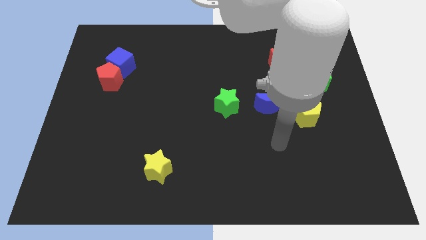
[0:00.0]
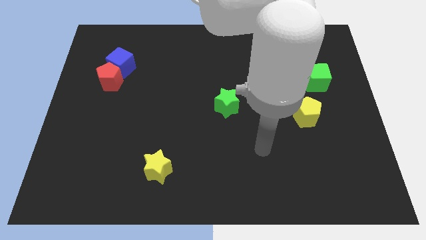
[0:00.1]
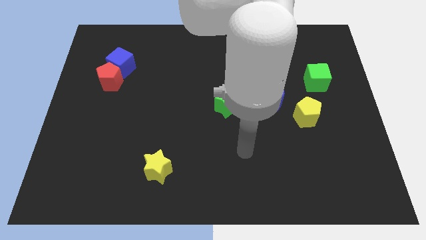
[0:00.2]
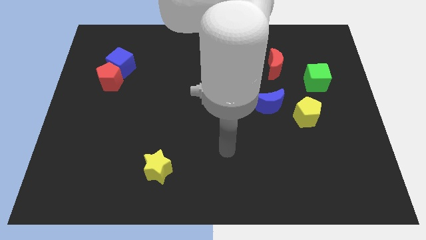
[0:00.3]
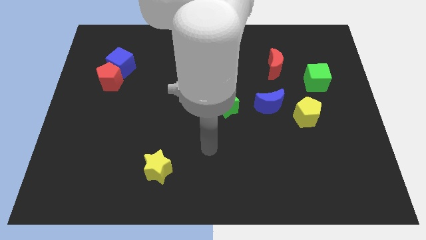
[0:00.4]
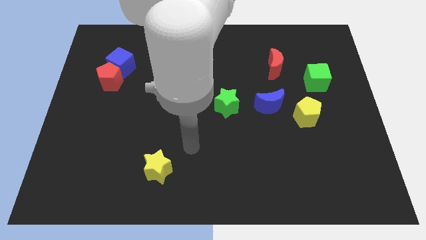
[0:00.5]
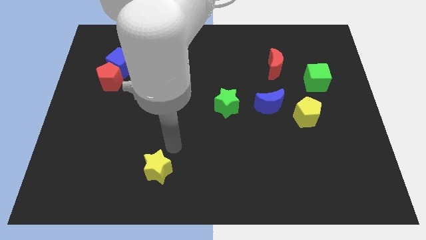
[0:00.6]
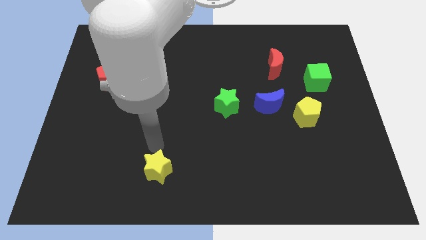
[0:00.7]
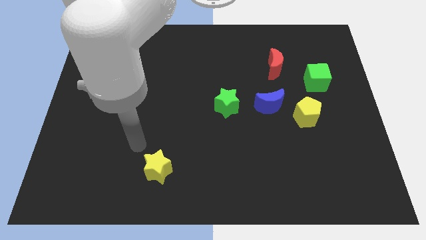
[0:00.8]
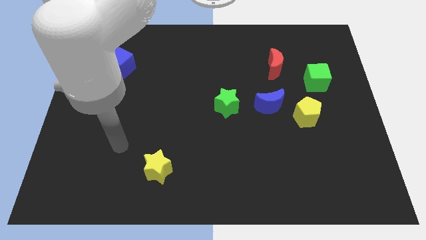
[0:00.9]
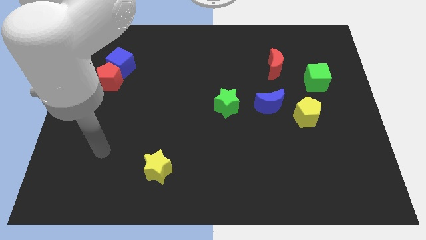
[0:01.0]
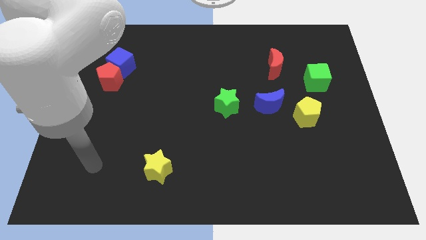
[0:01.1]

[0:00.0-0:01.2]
point your arm at the left side of the yellow star

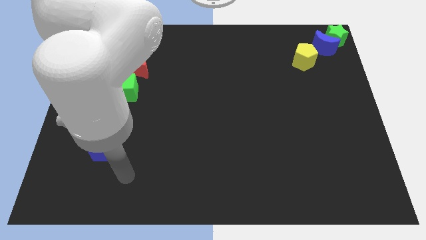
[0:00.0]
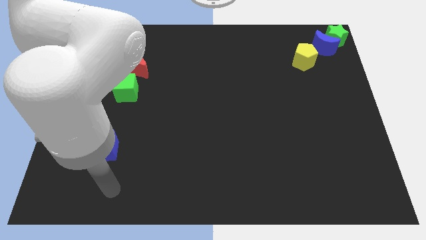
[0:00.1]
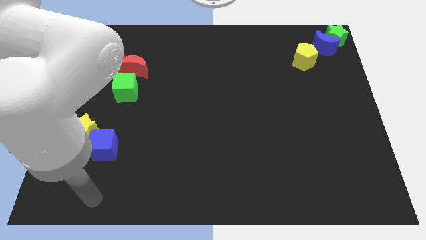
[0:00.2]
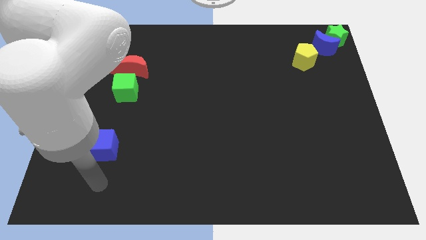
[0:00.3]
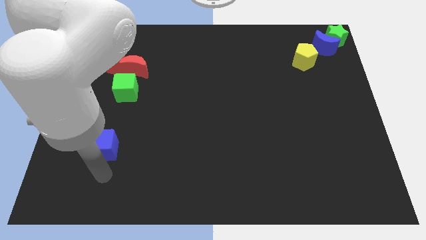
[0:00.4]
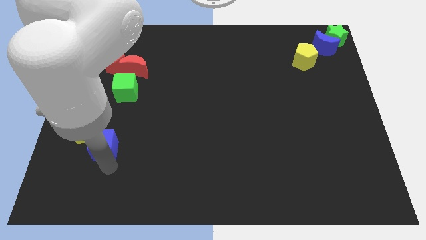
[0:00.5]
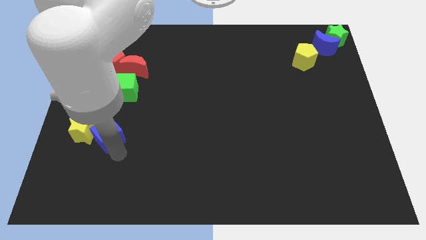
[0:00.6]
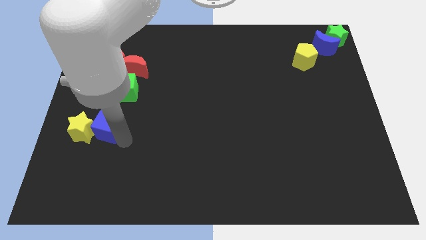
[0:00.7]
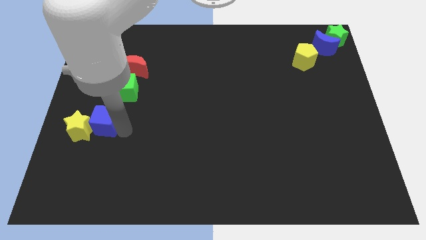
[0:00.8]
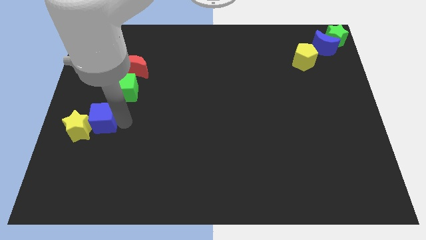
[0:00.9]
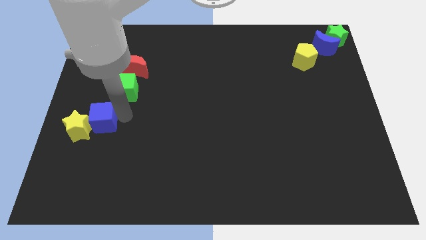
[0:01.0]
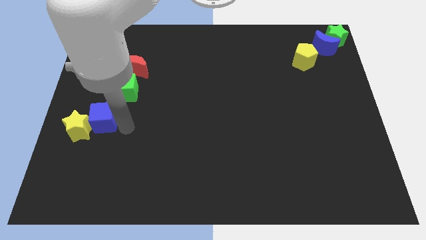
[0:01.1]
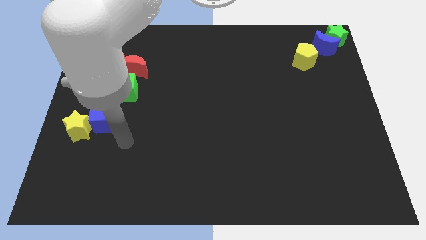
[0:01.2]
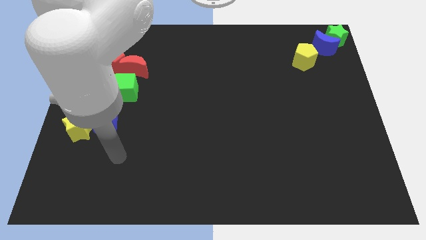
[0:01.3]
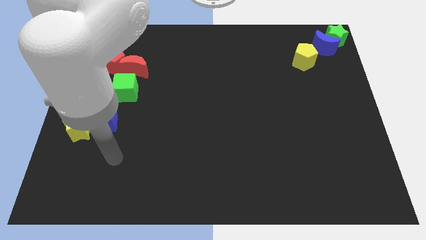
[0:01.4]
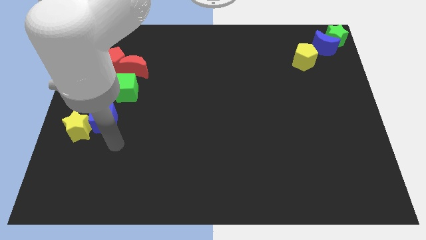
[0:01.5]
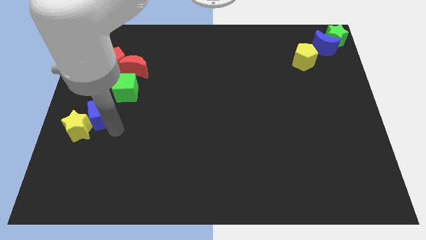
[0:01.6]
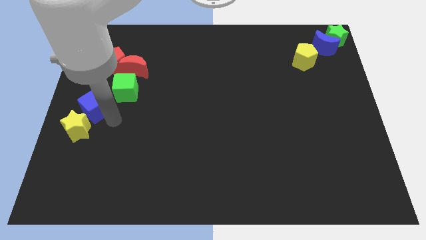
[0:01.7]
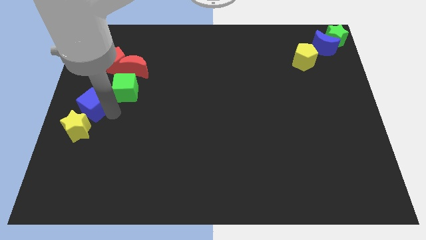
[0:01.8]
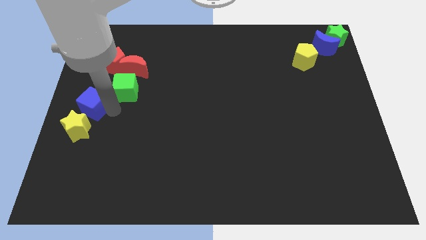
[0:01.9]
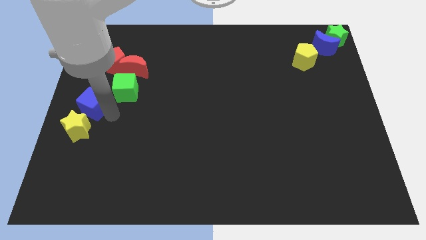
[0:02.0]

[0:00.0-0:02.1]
push the blue cube into the yellow star

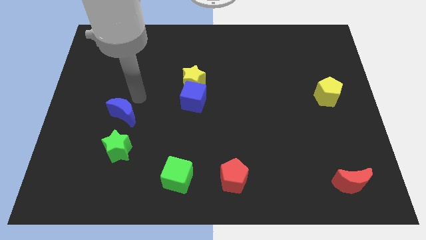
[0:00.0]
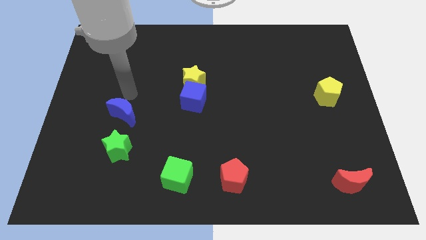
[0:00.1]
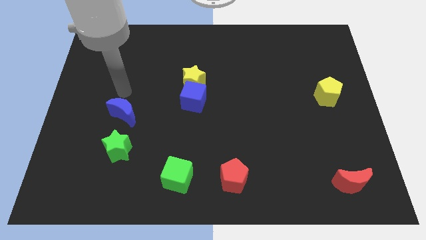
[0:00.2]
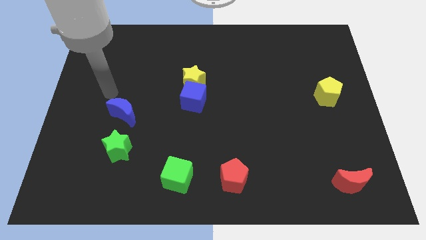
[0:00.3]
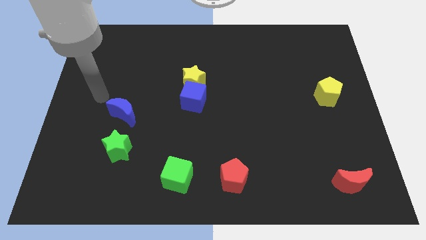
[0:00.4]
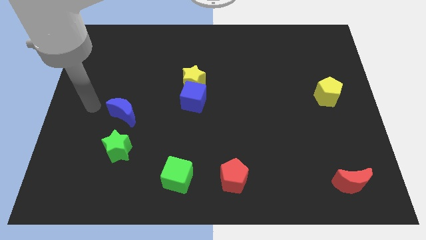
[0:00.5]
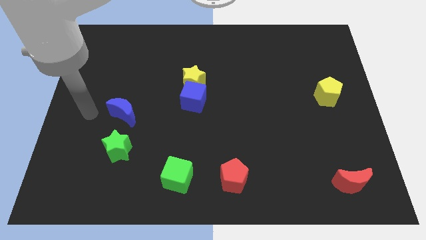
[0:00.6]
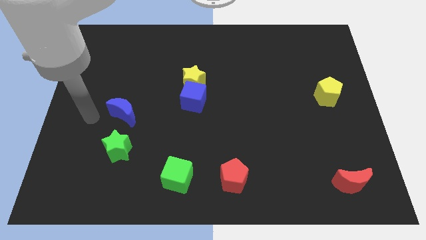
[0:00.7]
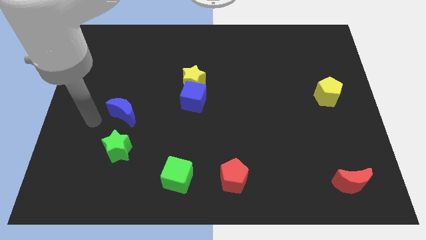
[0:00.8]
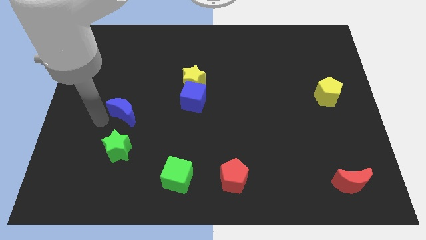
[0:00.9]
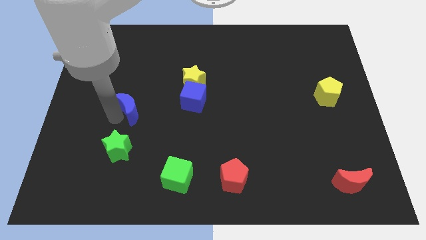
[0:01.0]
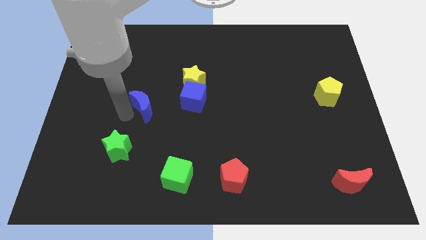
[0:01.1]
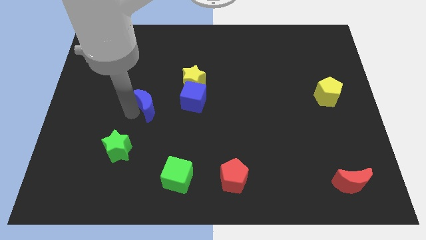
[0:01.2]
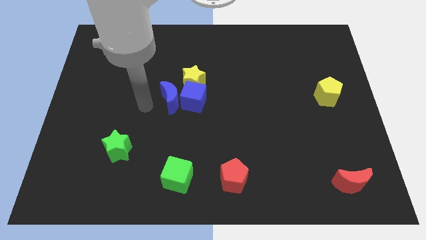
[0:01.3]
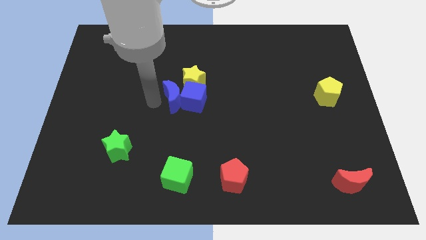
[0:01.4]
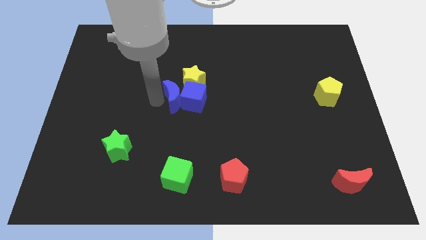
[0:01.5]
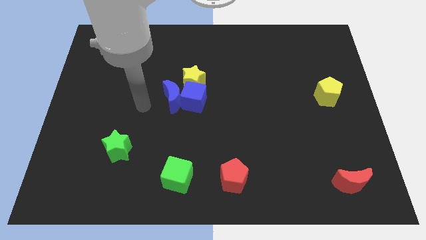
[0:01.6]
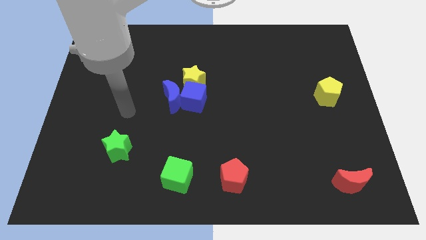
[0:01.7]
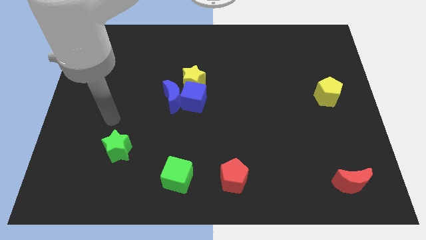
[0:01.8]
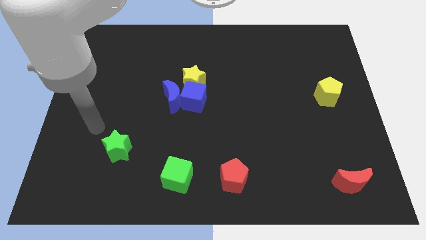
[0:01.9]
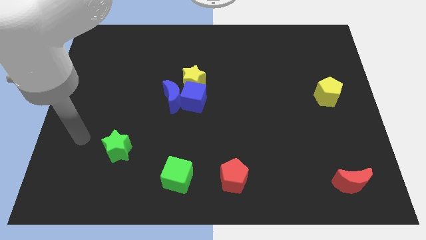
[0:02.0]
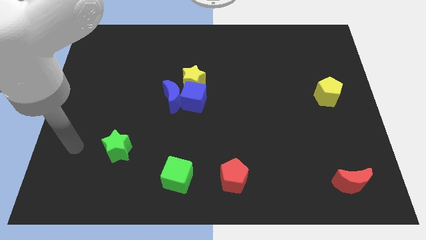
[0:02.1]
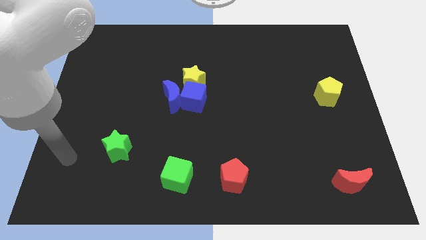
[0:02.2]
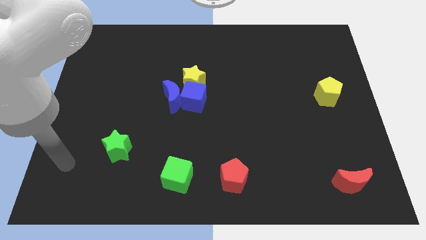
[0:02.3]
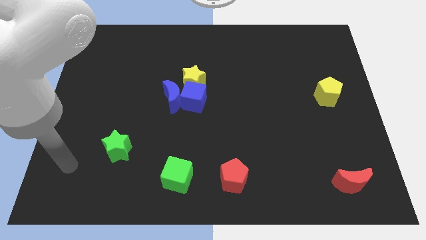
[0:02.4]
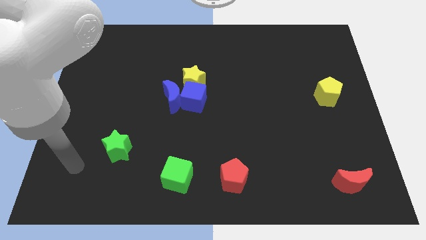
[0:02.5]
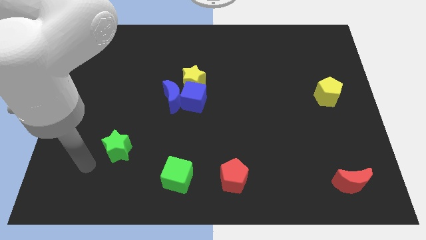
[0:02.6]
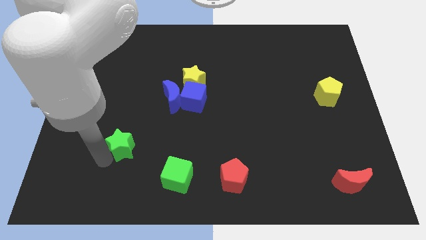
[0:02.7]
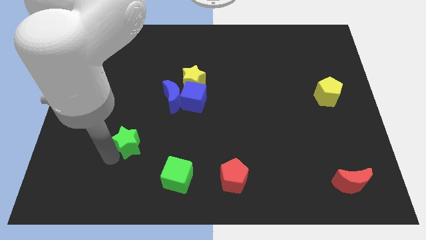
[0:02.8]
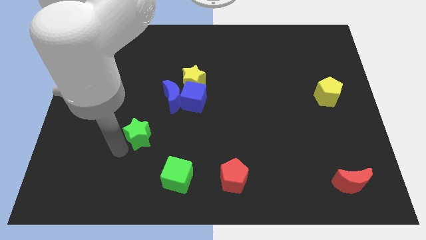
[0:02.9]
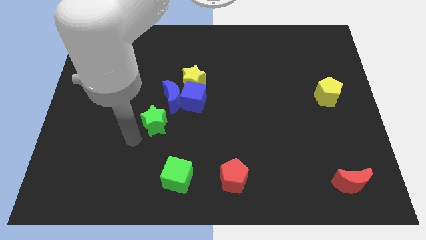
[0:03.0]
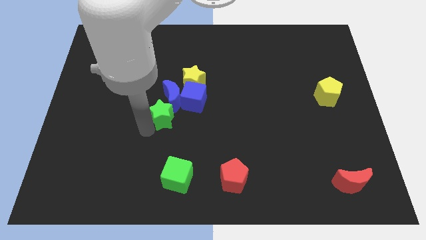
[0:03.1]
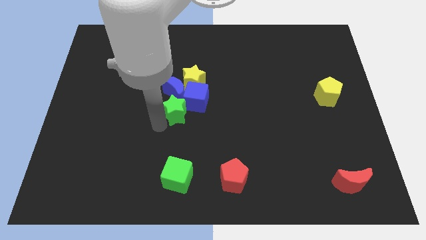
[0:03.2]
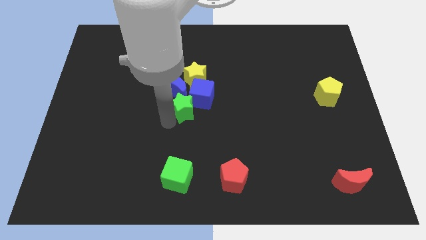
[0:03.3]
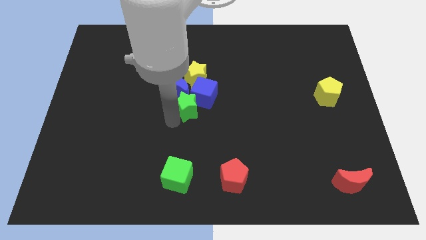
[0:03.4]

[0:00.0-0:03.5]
group up the blue blocks with the green star and yellow star

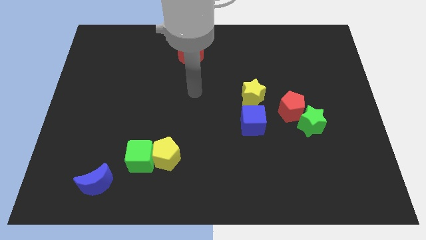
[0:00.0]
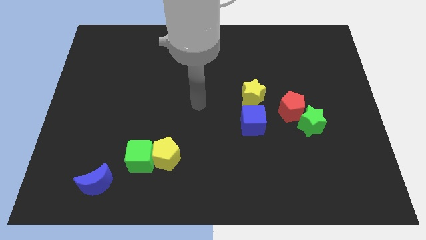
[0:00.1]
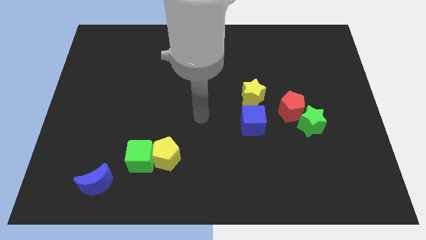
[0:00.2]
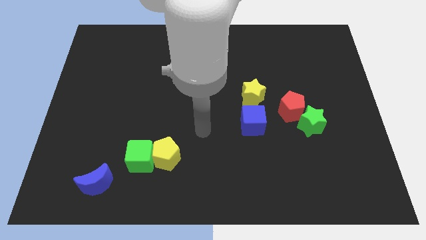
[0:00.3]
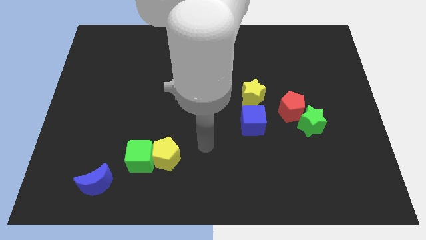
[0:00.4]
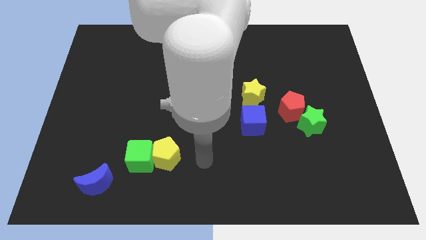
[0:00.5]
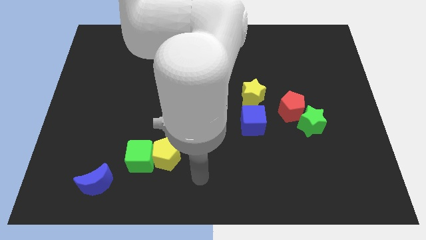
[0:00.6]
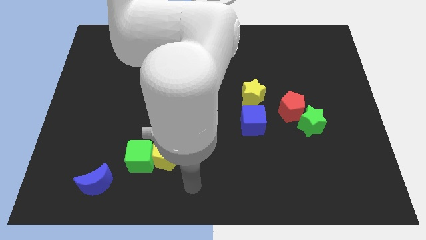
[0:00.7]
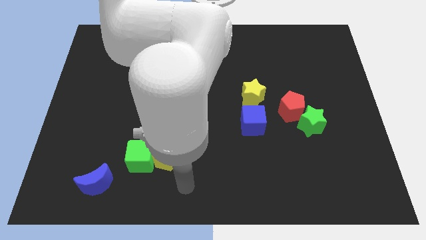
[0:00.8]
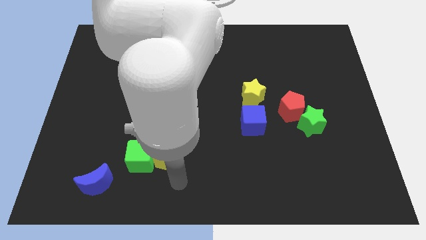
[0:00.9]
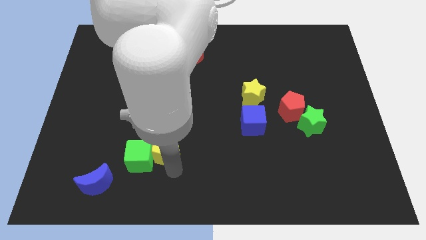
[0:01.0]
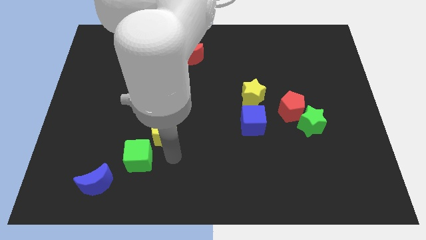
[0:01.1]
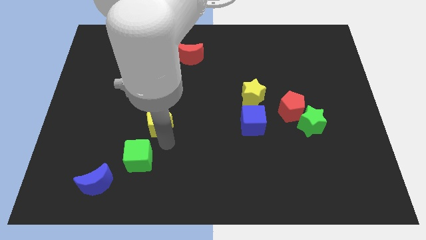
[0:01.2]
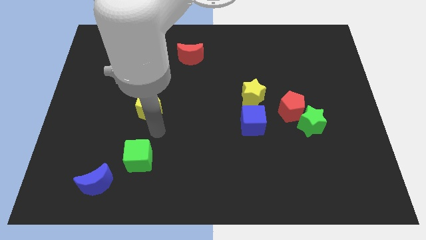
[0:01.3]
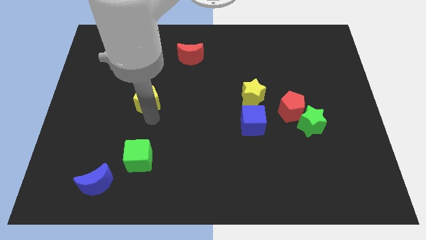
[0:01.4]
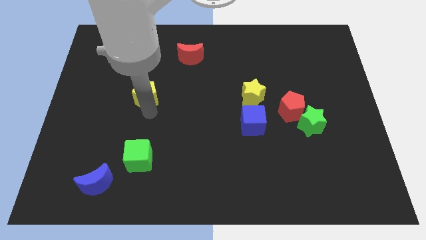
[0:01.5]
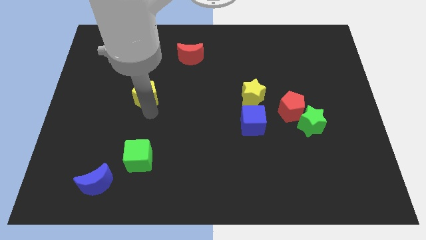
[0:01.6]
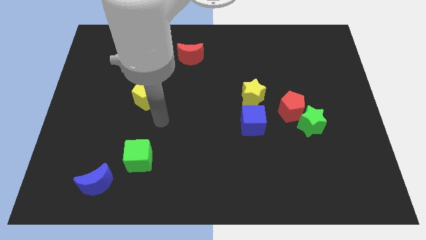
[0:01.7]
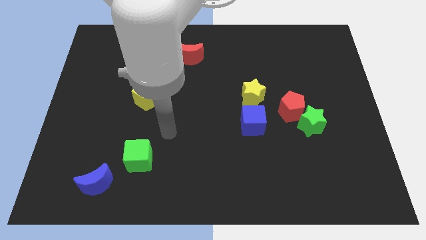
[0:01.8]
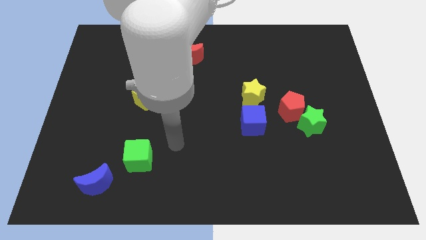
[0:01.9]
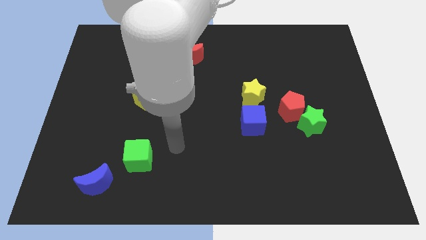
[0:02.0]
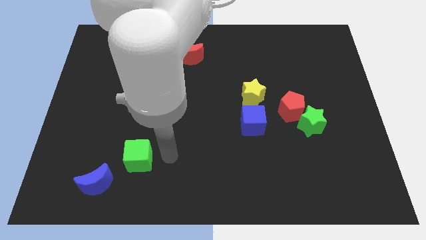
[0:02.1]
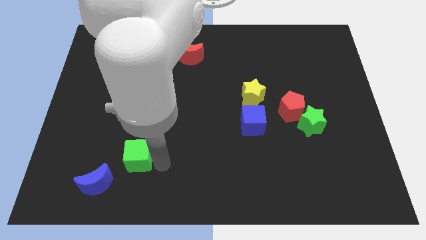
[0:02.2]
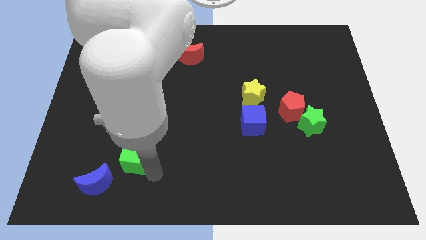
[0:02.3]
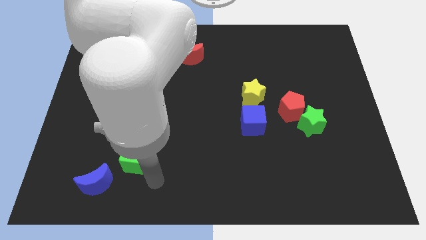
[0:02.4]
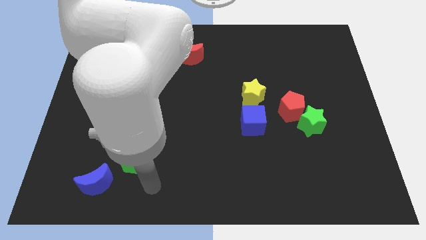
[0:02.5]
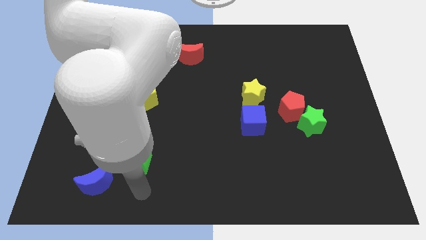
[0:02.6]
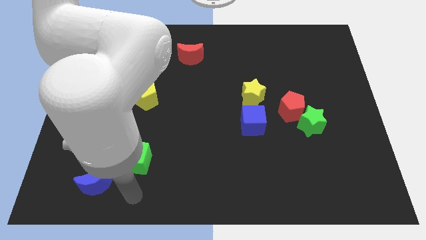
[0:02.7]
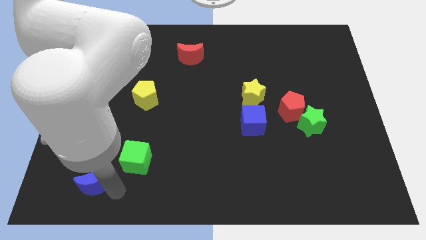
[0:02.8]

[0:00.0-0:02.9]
move the yellow pentagon to the top of the board
